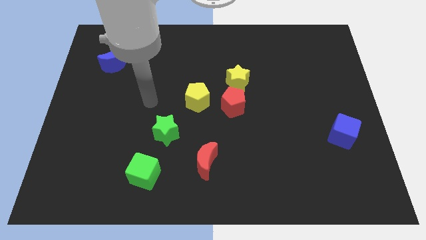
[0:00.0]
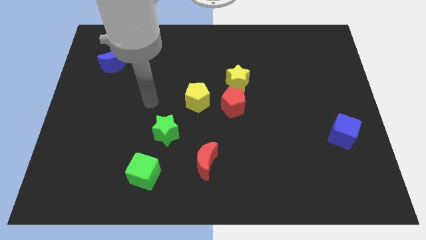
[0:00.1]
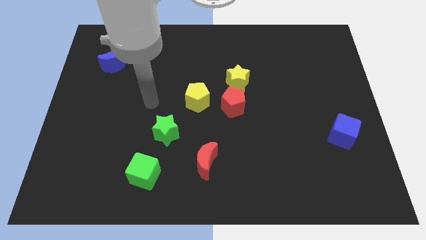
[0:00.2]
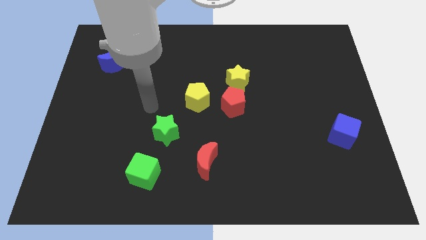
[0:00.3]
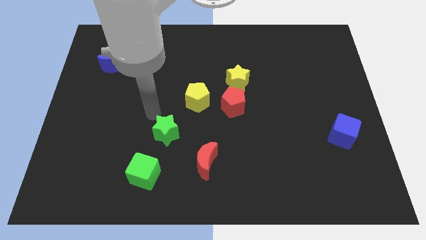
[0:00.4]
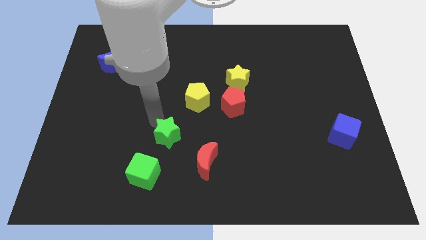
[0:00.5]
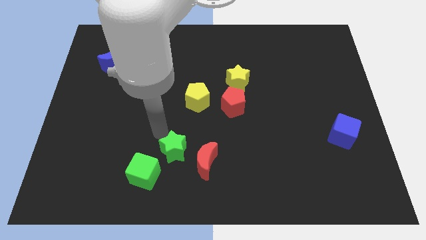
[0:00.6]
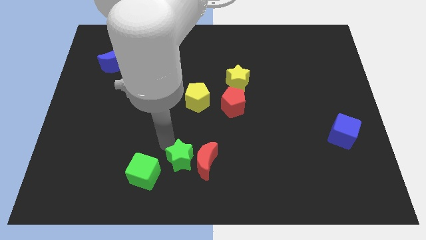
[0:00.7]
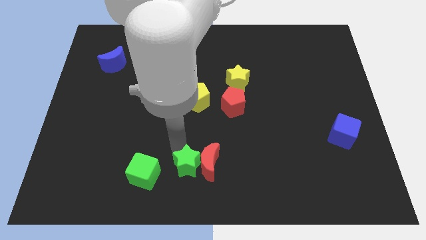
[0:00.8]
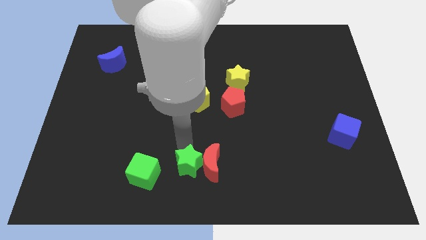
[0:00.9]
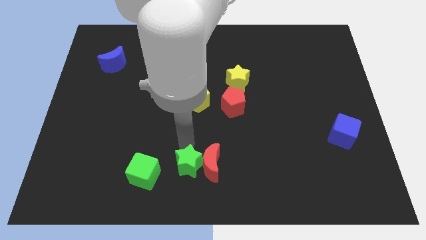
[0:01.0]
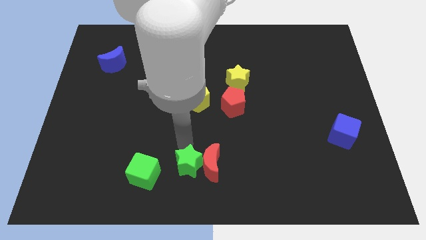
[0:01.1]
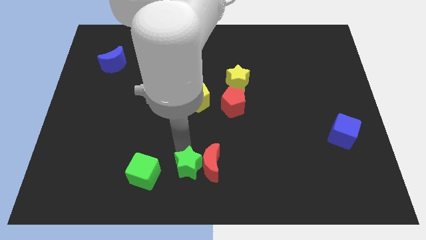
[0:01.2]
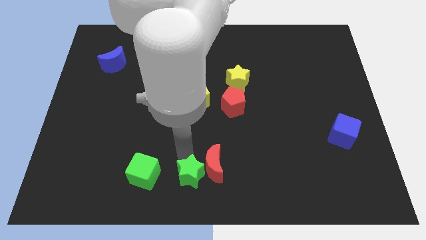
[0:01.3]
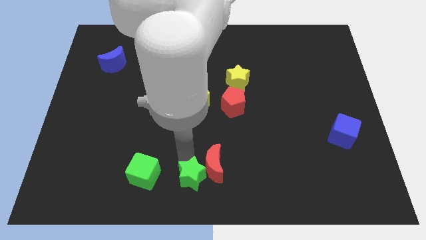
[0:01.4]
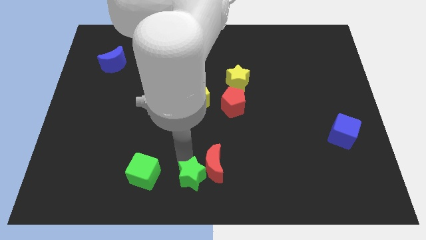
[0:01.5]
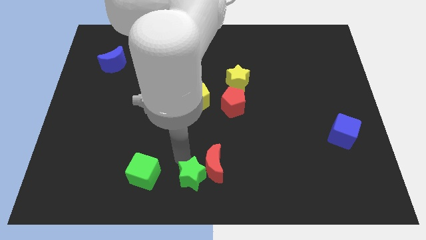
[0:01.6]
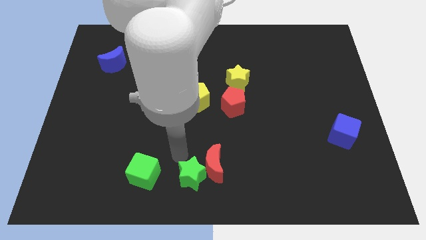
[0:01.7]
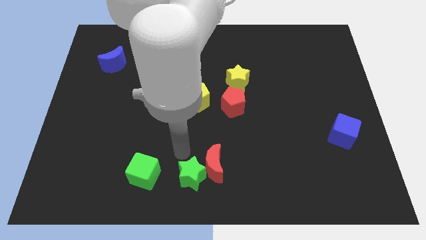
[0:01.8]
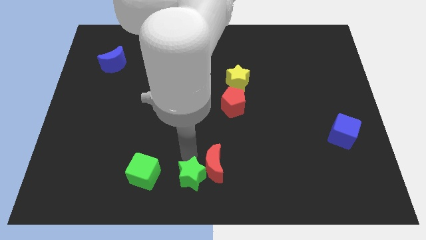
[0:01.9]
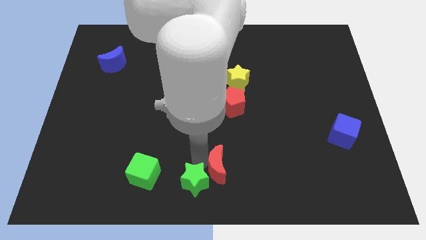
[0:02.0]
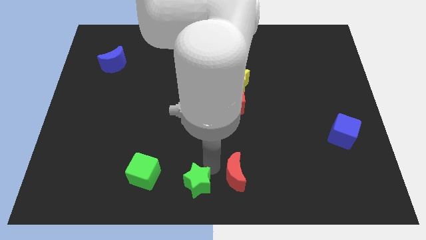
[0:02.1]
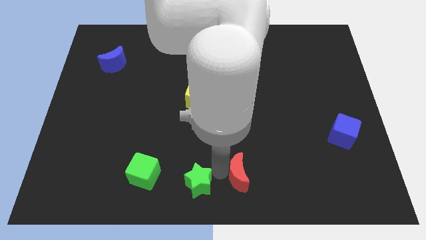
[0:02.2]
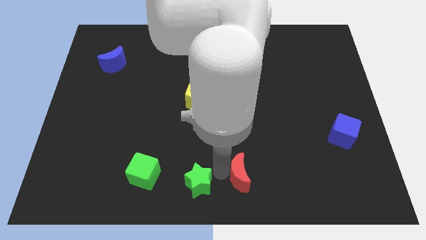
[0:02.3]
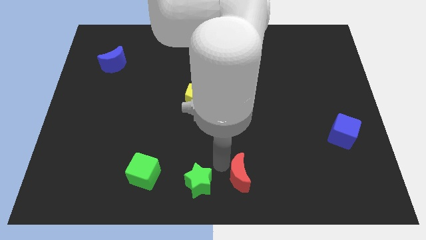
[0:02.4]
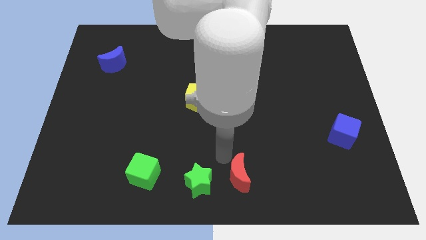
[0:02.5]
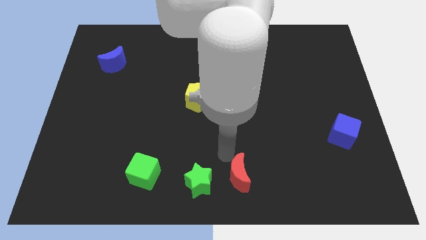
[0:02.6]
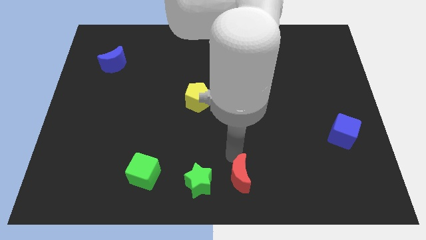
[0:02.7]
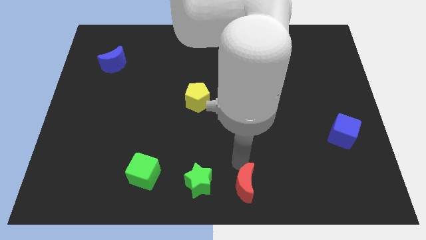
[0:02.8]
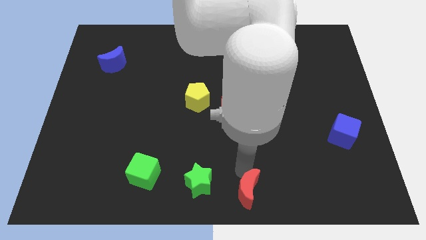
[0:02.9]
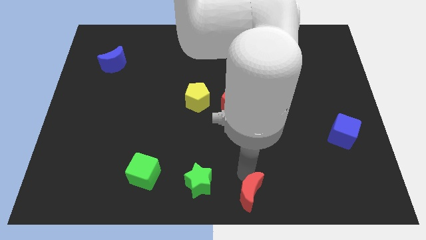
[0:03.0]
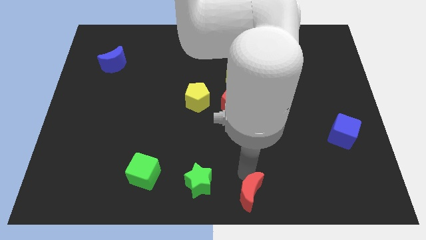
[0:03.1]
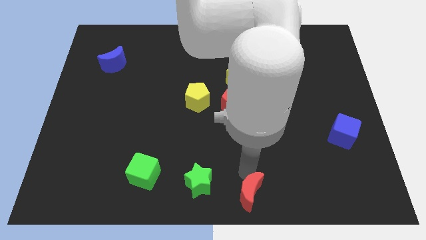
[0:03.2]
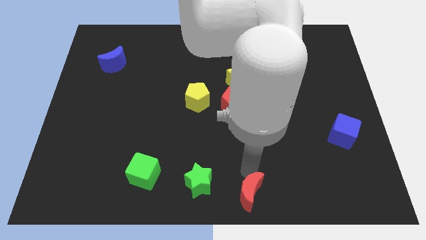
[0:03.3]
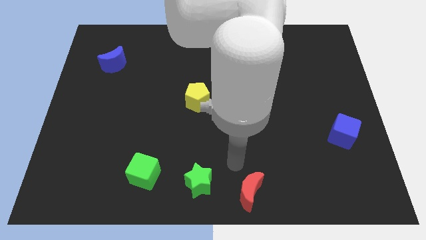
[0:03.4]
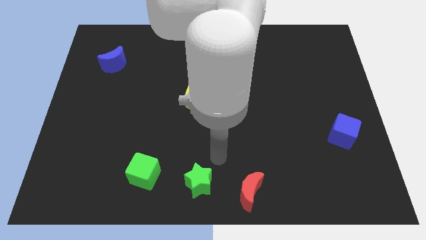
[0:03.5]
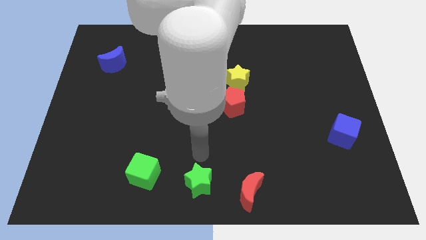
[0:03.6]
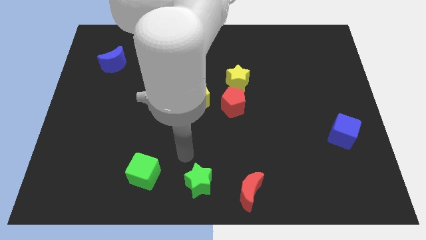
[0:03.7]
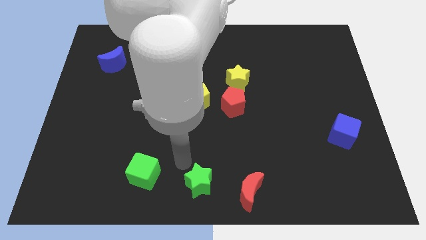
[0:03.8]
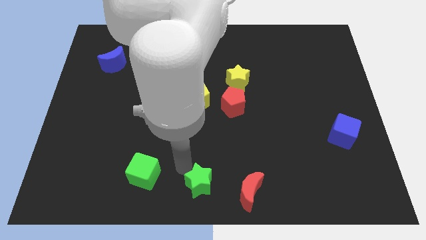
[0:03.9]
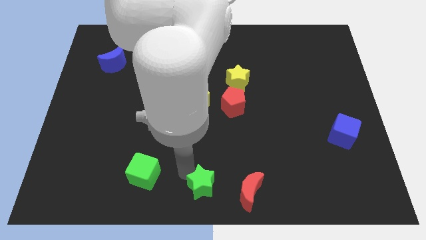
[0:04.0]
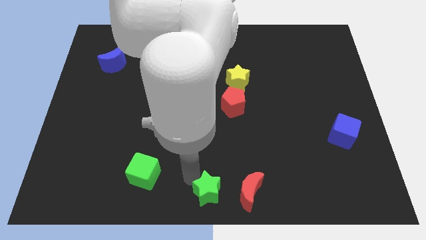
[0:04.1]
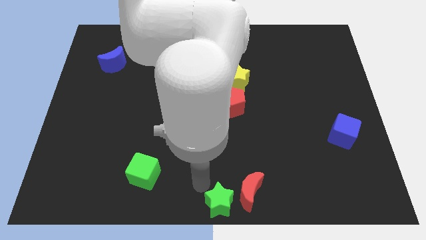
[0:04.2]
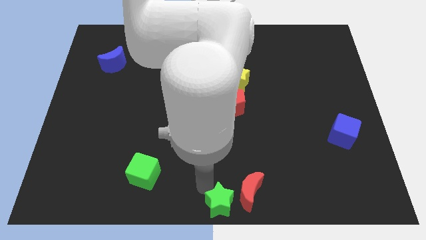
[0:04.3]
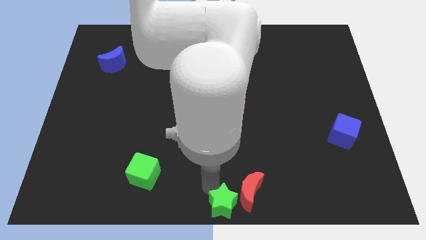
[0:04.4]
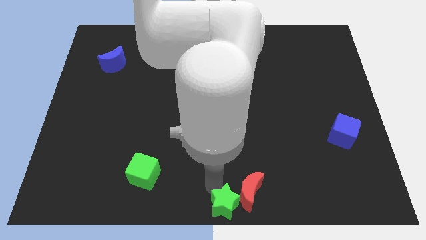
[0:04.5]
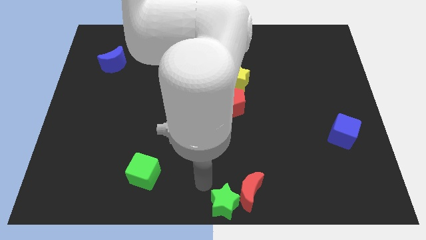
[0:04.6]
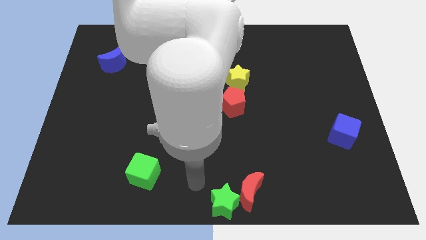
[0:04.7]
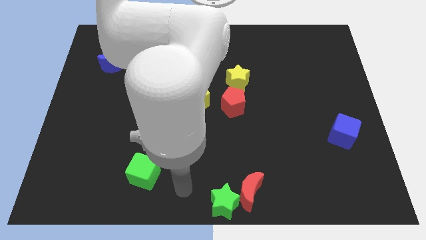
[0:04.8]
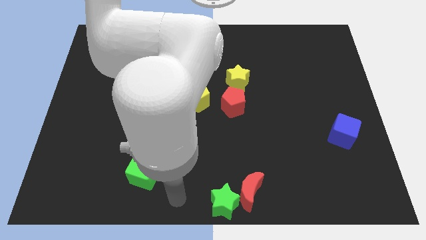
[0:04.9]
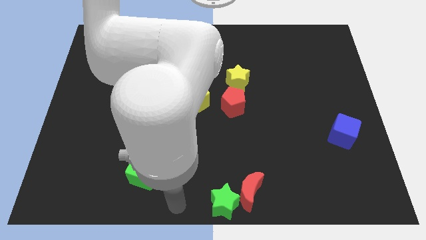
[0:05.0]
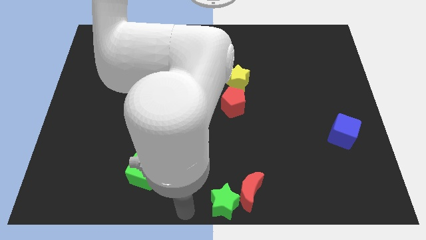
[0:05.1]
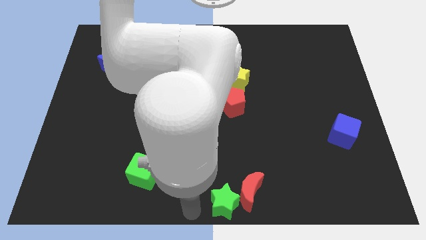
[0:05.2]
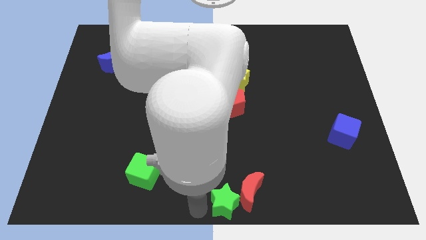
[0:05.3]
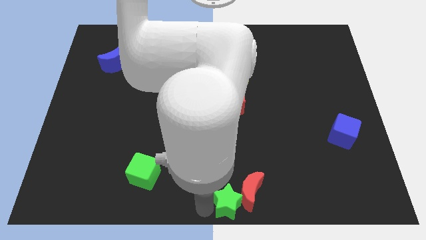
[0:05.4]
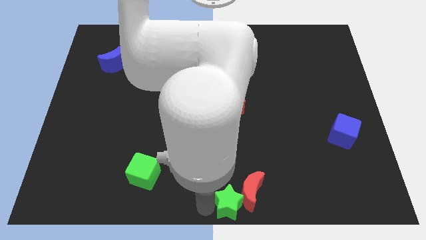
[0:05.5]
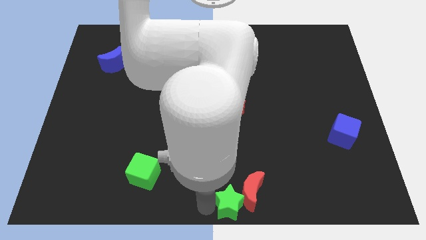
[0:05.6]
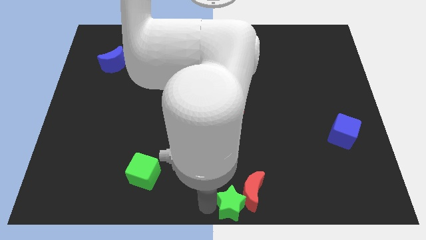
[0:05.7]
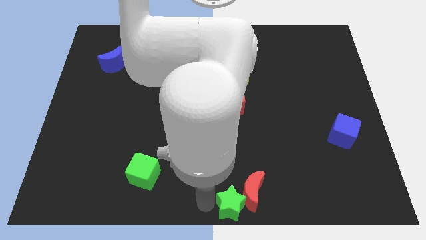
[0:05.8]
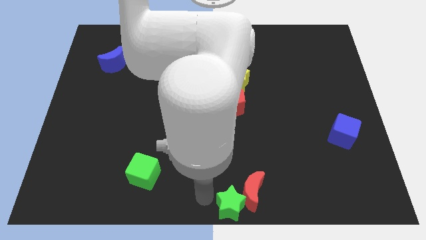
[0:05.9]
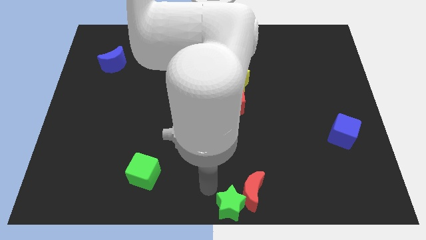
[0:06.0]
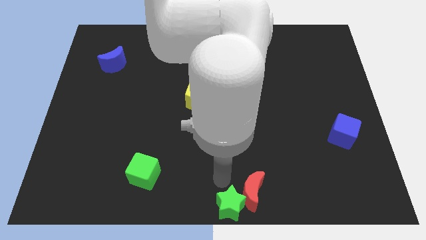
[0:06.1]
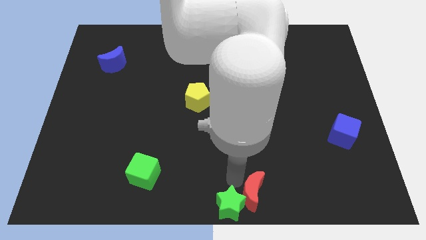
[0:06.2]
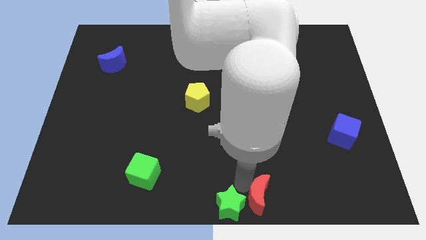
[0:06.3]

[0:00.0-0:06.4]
move green star to the bottom center of the board

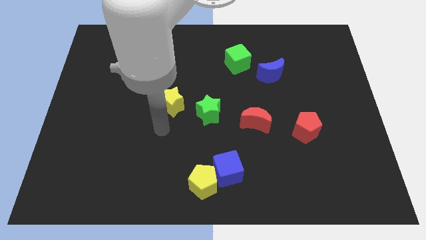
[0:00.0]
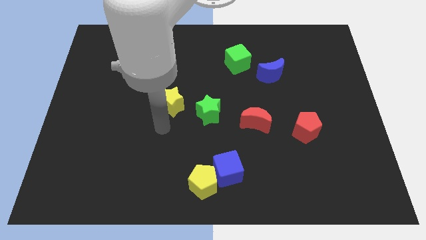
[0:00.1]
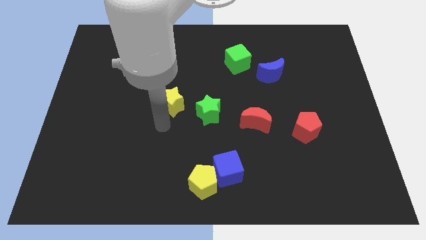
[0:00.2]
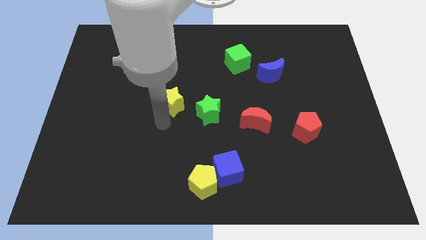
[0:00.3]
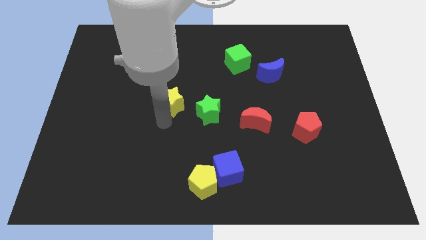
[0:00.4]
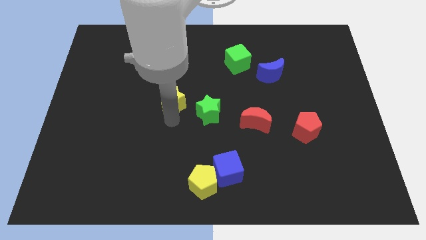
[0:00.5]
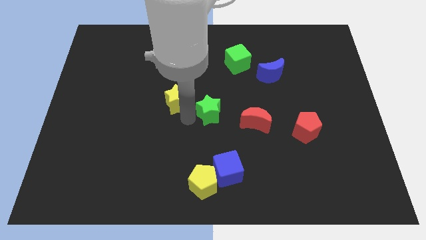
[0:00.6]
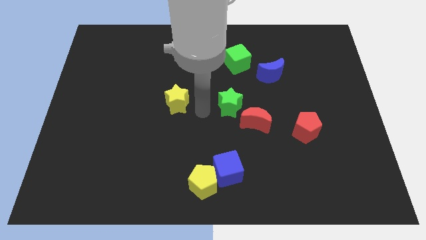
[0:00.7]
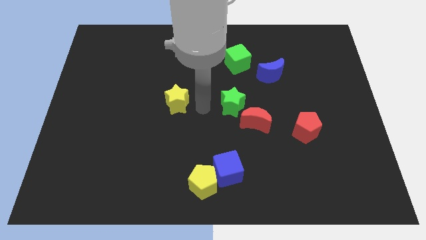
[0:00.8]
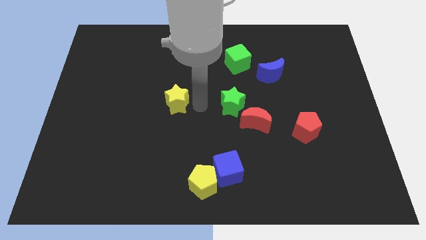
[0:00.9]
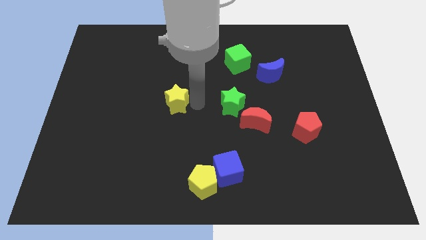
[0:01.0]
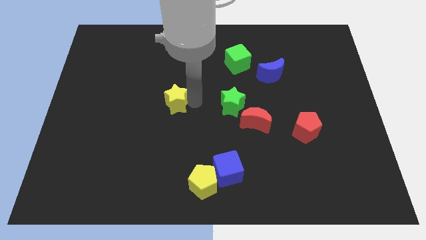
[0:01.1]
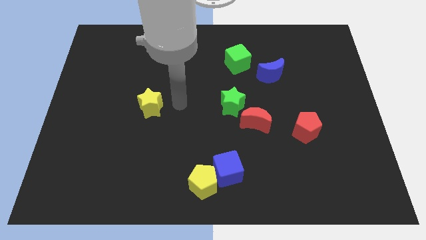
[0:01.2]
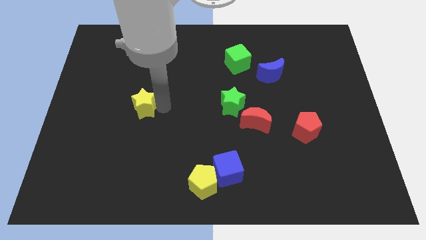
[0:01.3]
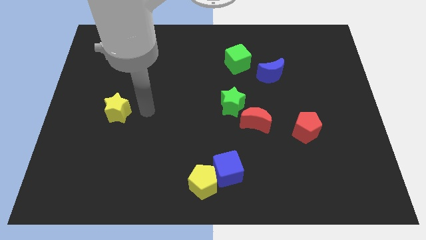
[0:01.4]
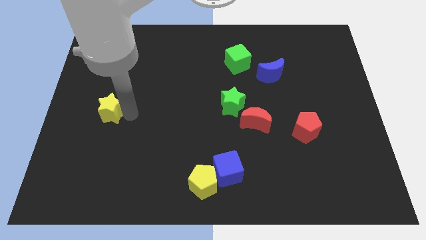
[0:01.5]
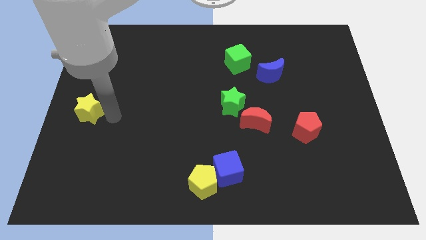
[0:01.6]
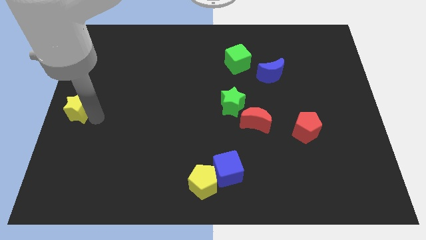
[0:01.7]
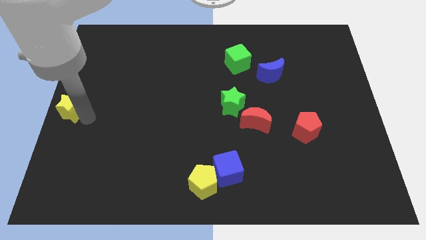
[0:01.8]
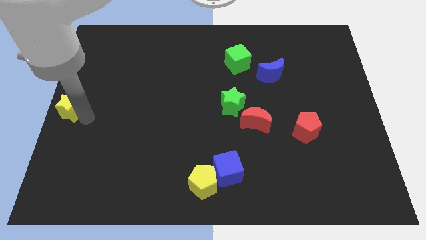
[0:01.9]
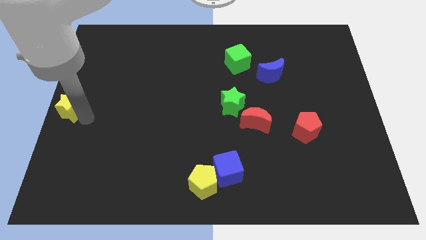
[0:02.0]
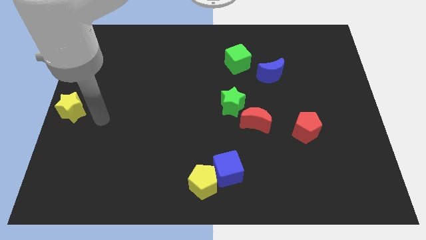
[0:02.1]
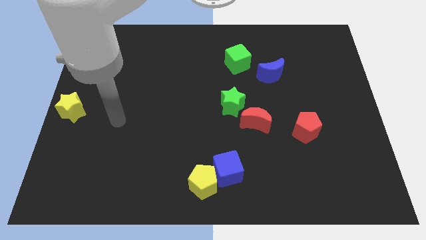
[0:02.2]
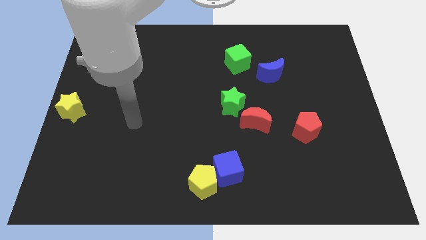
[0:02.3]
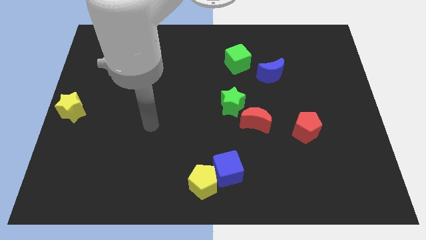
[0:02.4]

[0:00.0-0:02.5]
push the yellow star towards the left side

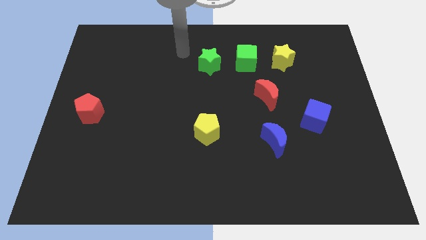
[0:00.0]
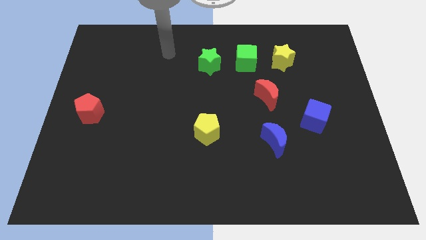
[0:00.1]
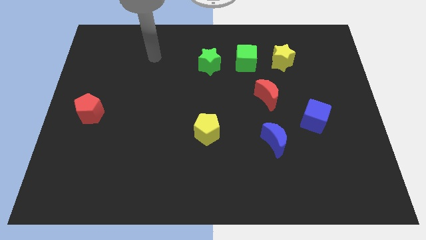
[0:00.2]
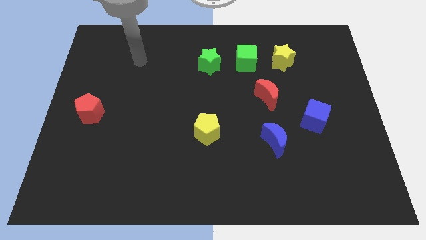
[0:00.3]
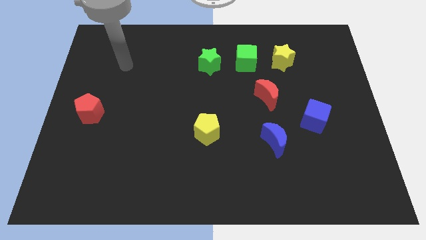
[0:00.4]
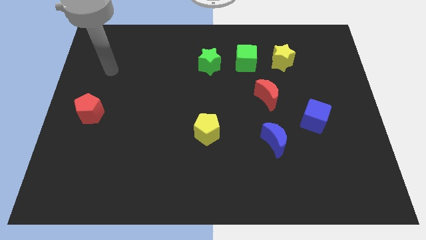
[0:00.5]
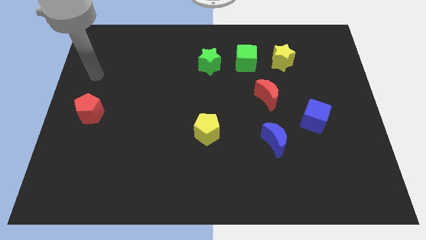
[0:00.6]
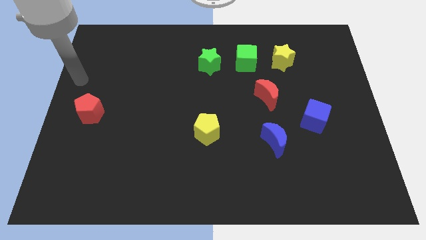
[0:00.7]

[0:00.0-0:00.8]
place the arm above the red pentagon
